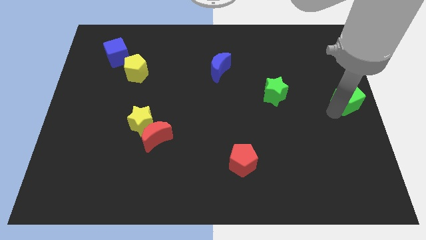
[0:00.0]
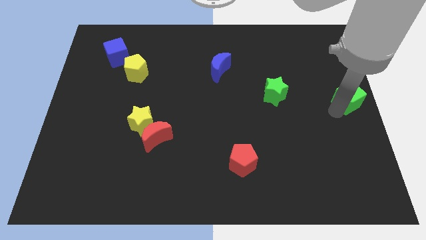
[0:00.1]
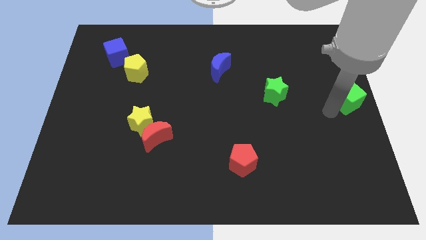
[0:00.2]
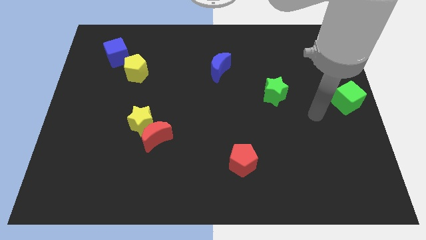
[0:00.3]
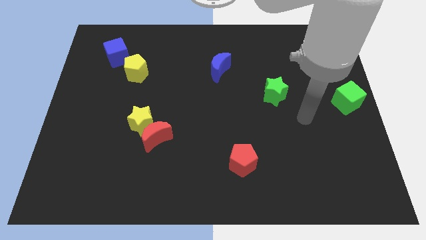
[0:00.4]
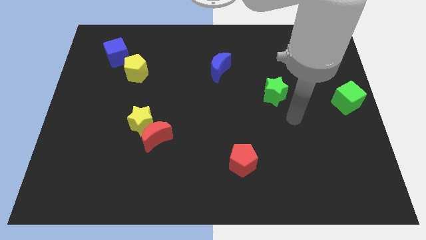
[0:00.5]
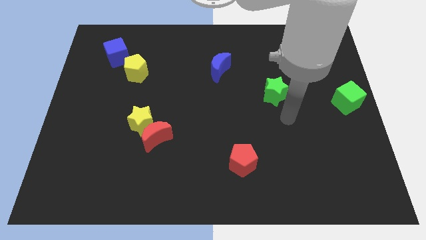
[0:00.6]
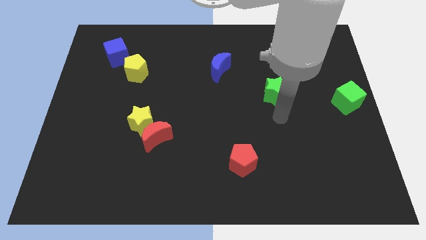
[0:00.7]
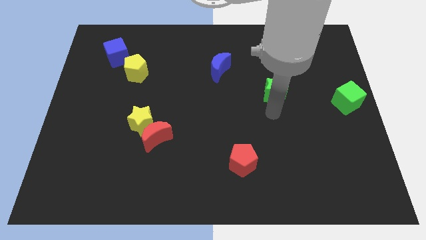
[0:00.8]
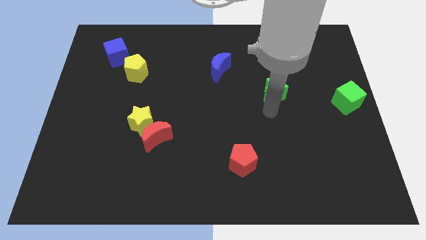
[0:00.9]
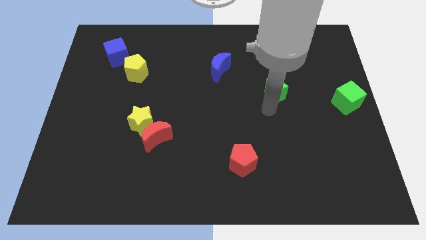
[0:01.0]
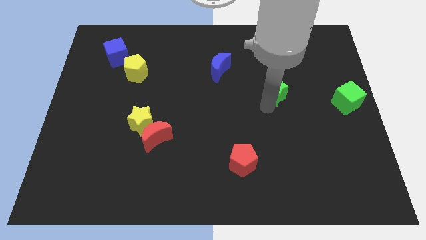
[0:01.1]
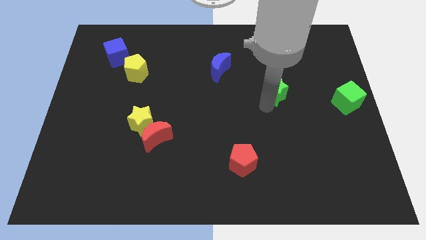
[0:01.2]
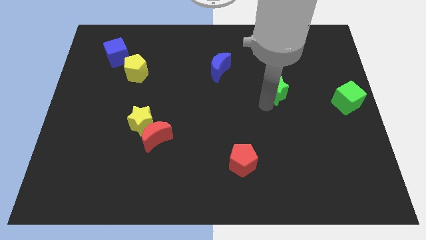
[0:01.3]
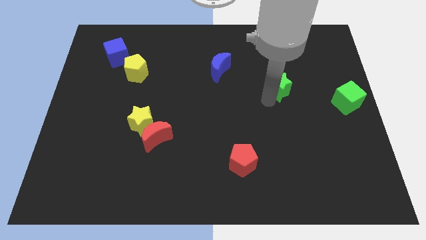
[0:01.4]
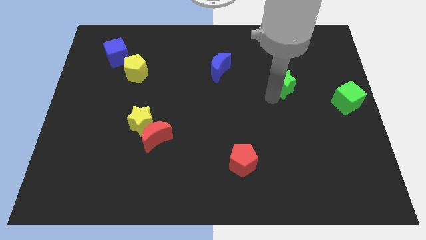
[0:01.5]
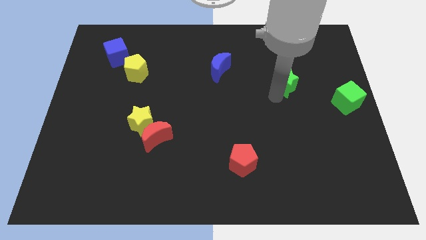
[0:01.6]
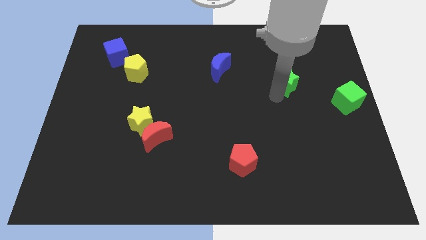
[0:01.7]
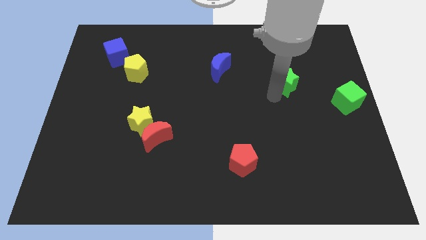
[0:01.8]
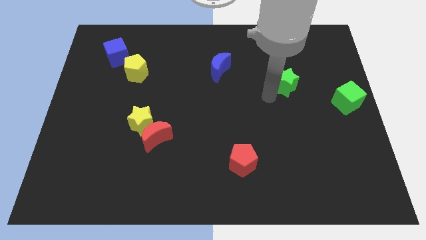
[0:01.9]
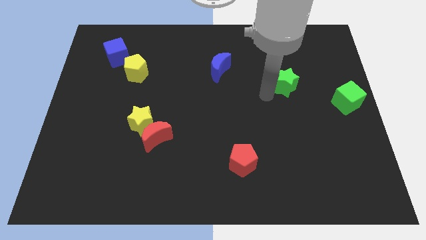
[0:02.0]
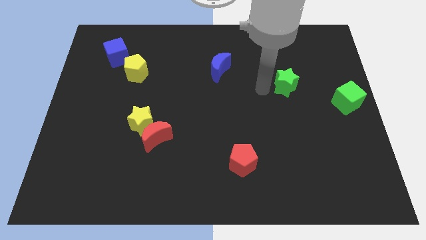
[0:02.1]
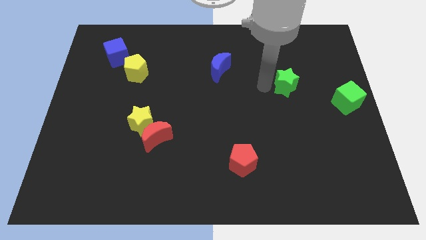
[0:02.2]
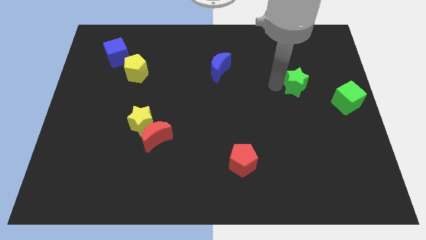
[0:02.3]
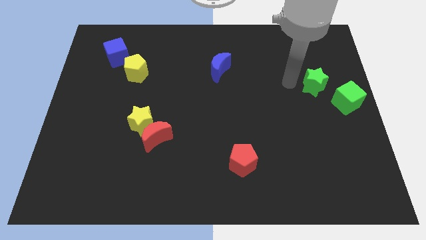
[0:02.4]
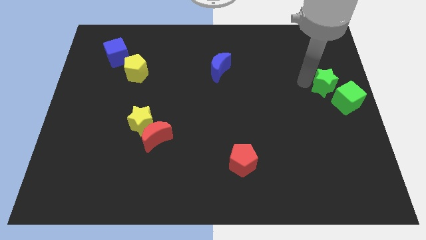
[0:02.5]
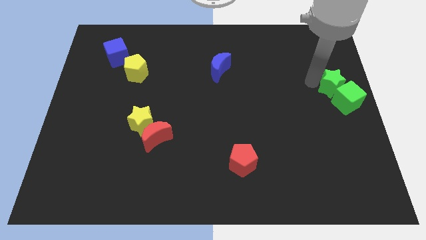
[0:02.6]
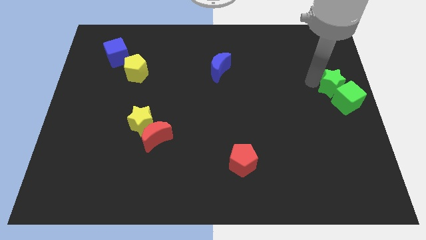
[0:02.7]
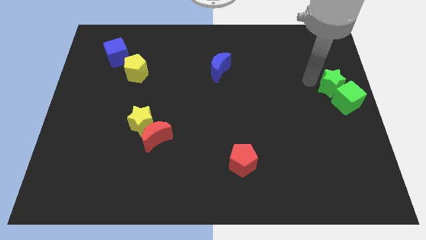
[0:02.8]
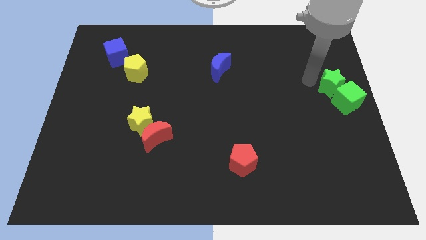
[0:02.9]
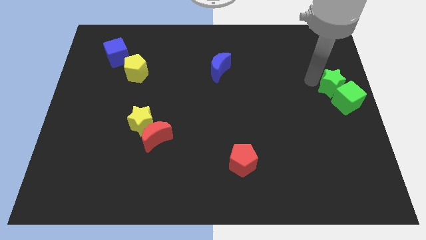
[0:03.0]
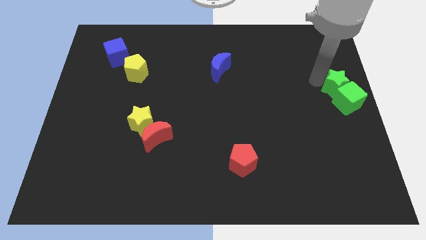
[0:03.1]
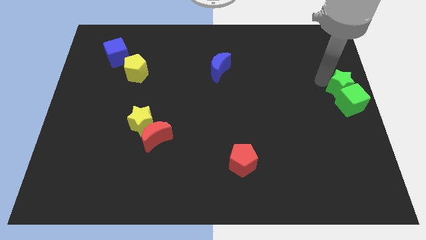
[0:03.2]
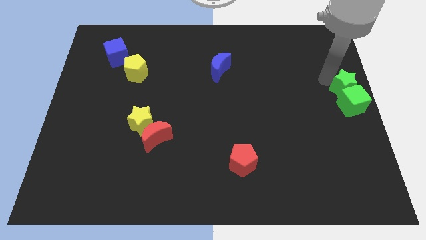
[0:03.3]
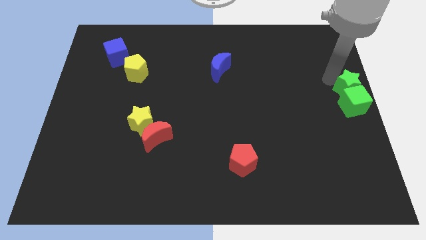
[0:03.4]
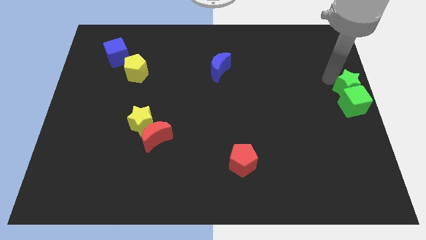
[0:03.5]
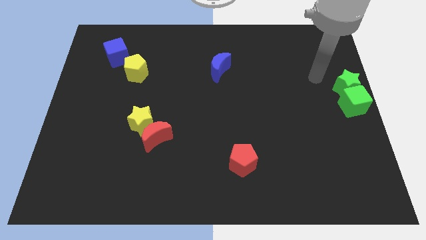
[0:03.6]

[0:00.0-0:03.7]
move the green star to the top of the green cube

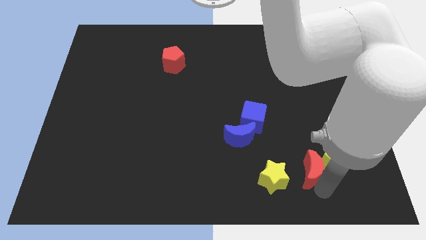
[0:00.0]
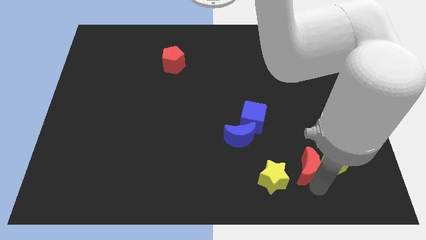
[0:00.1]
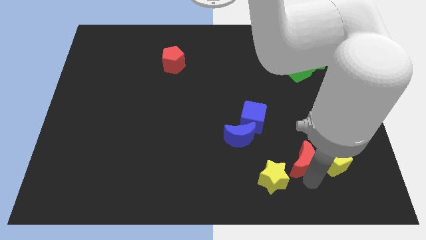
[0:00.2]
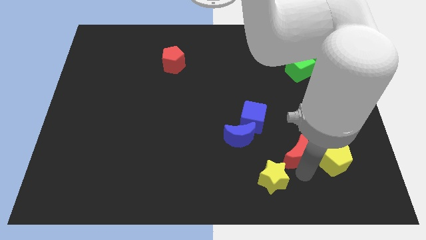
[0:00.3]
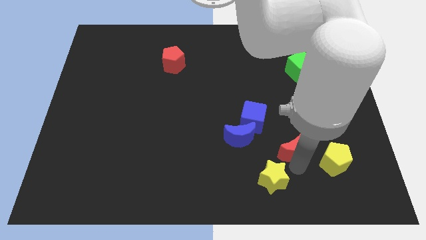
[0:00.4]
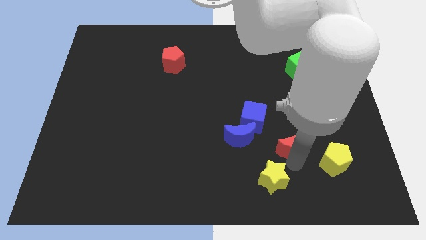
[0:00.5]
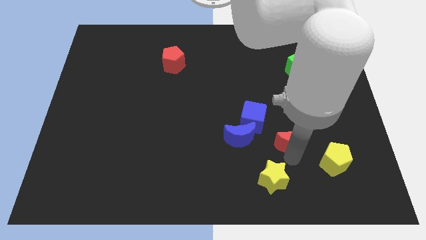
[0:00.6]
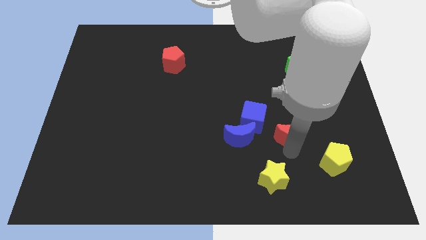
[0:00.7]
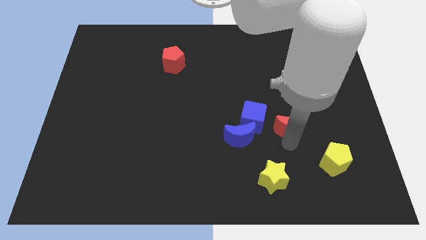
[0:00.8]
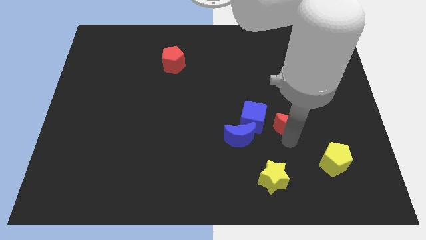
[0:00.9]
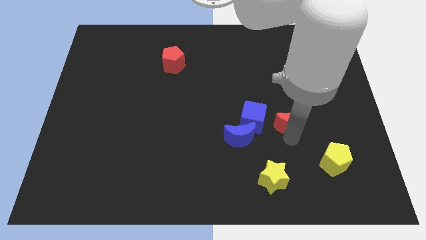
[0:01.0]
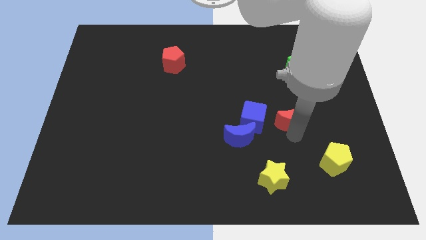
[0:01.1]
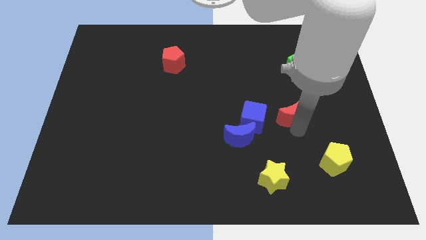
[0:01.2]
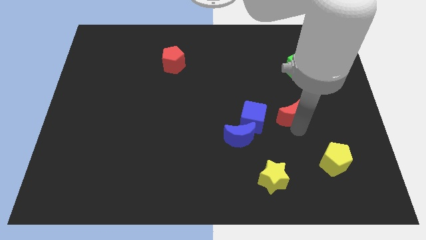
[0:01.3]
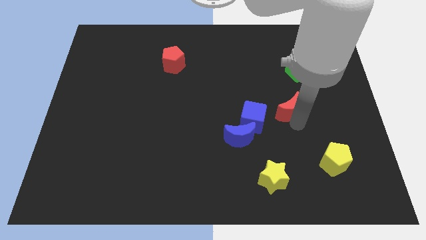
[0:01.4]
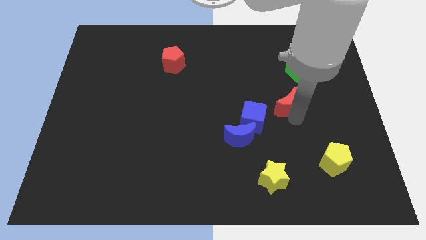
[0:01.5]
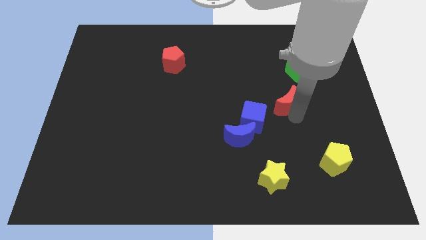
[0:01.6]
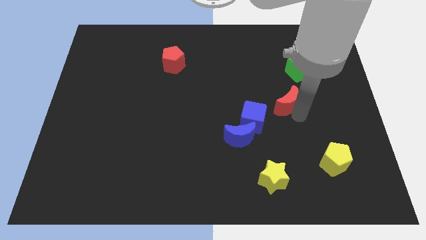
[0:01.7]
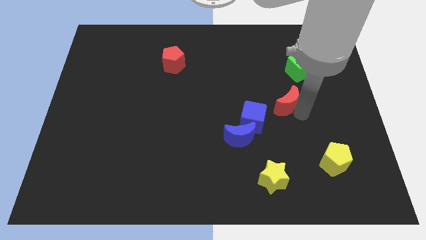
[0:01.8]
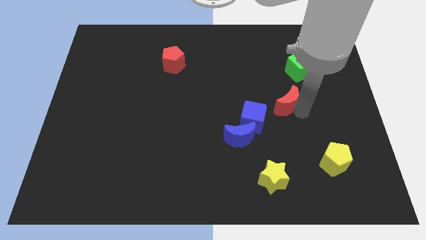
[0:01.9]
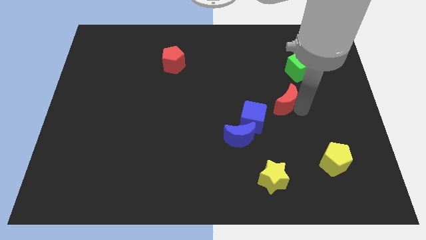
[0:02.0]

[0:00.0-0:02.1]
move the red moon towards the top side

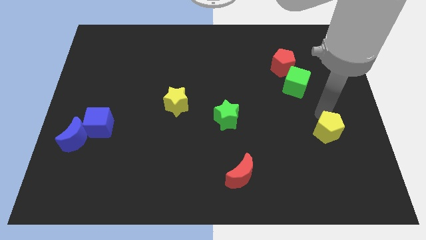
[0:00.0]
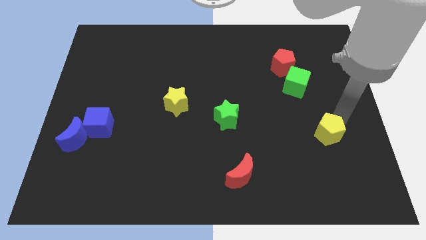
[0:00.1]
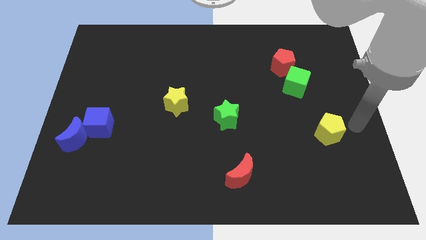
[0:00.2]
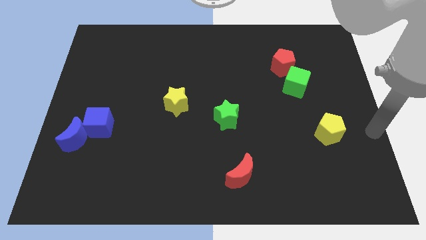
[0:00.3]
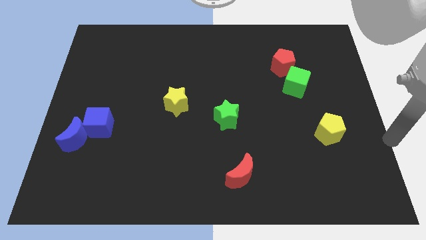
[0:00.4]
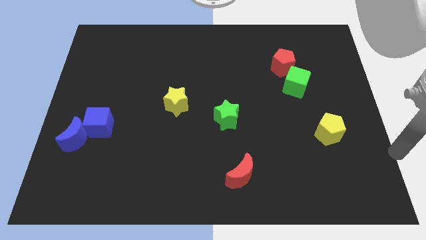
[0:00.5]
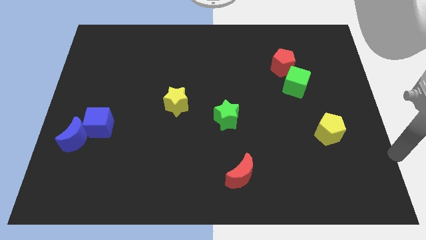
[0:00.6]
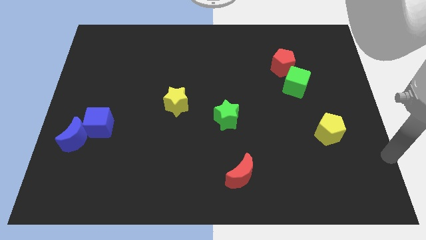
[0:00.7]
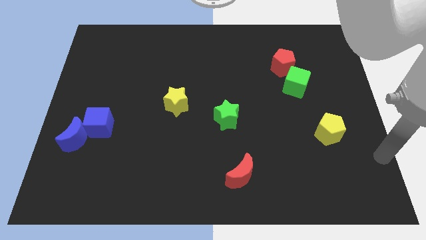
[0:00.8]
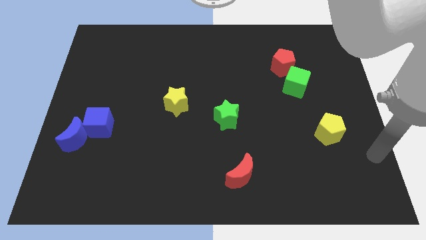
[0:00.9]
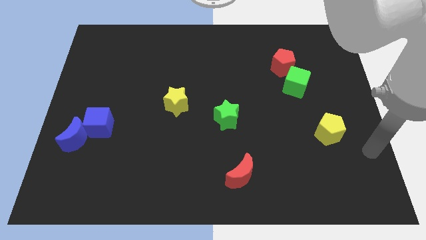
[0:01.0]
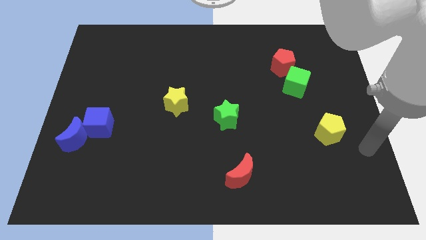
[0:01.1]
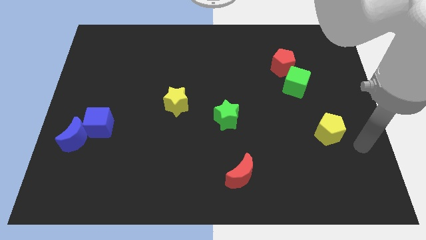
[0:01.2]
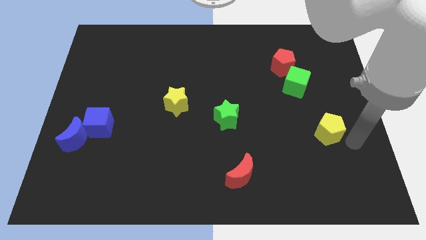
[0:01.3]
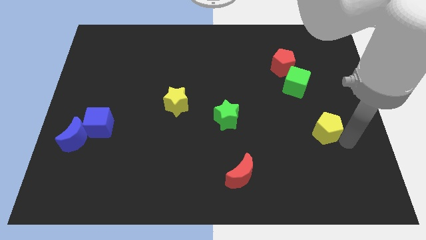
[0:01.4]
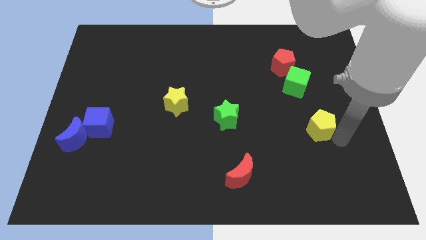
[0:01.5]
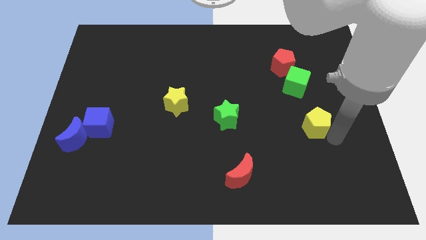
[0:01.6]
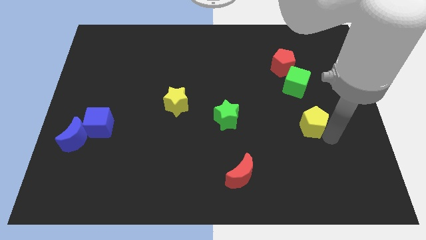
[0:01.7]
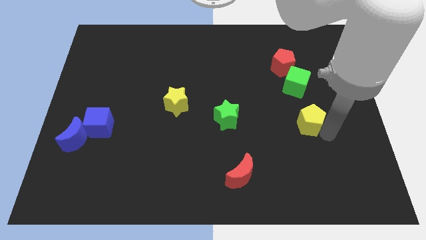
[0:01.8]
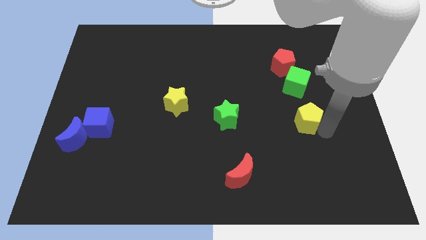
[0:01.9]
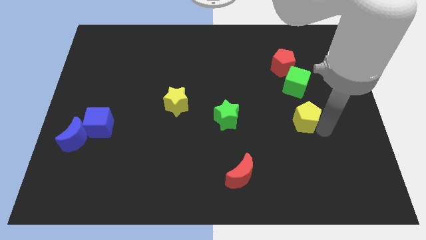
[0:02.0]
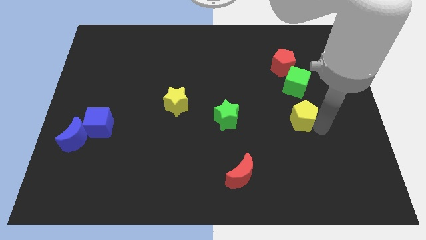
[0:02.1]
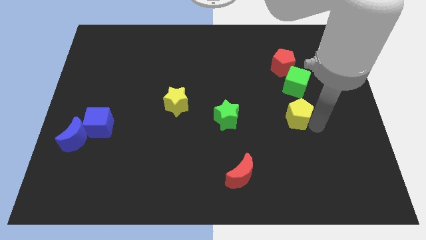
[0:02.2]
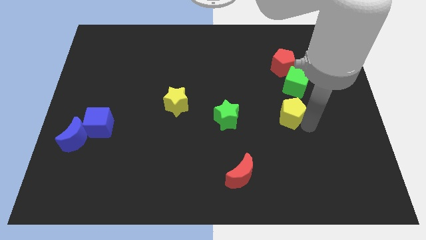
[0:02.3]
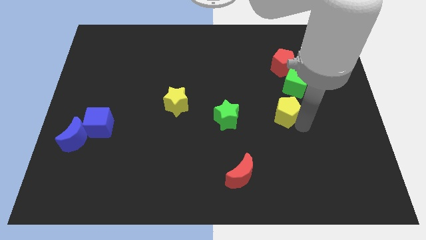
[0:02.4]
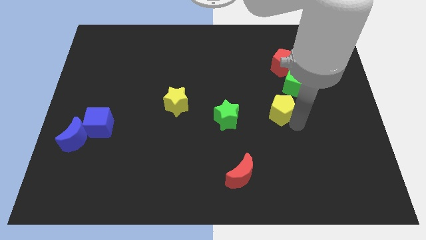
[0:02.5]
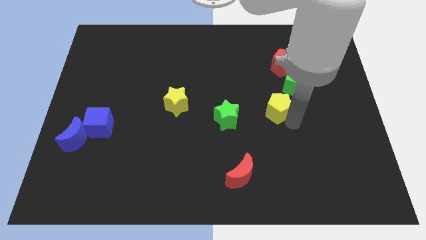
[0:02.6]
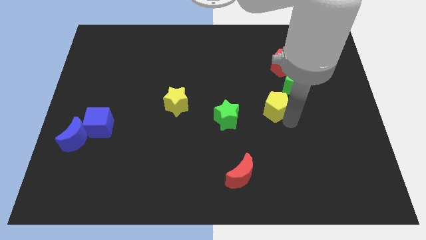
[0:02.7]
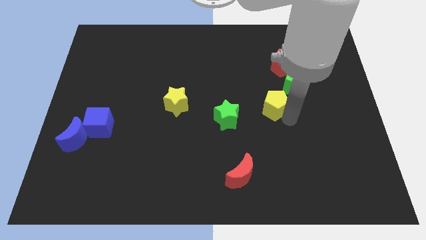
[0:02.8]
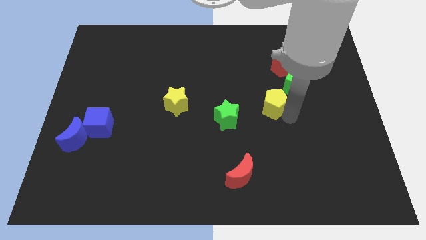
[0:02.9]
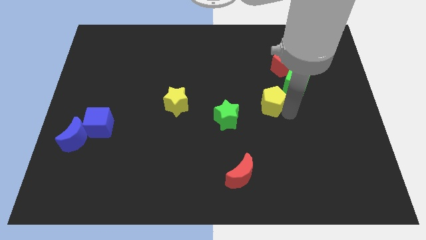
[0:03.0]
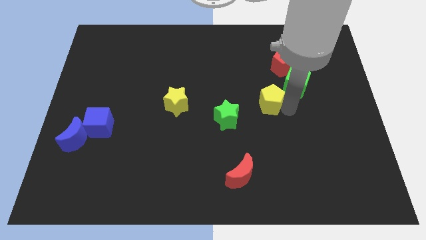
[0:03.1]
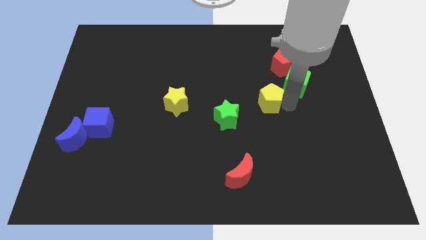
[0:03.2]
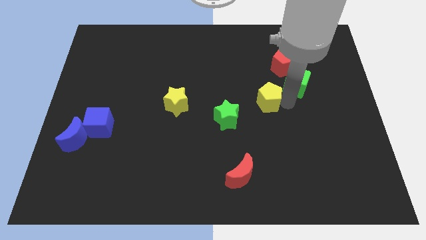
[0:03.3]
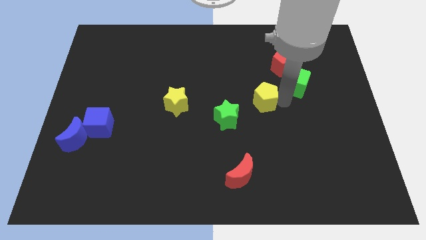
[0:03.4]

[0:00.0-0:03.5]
place the yellow pentagon between the green cube and green star
